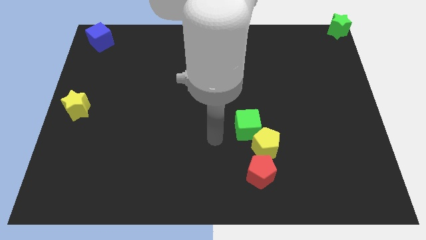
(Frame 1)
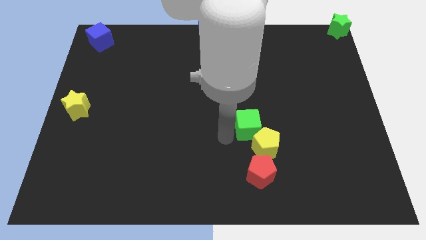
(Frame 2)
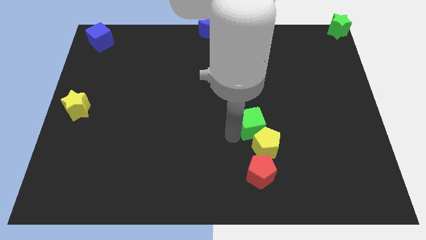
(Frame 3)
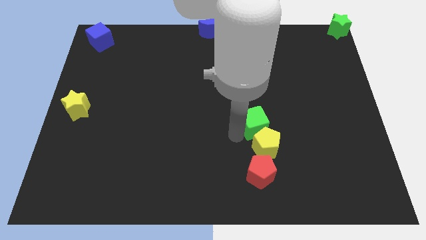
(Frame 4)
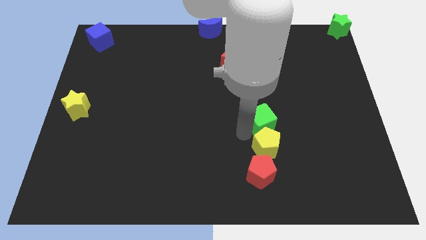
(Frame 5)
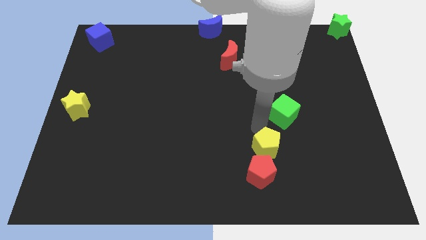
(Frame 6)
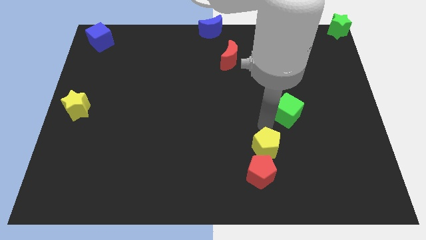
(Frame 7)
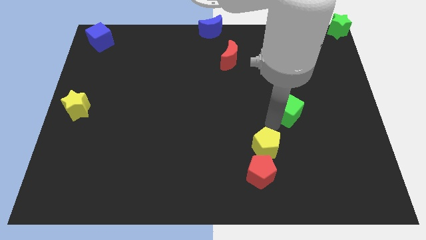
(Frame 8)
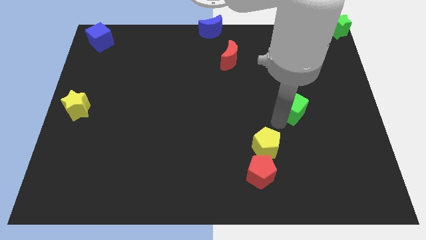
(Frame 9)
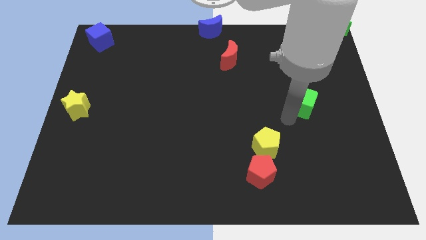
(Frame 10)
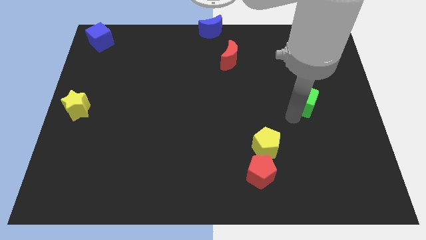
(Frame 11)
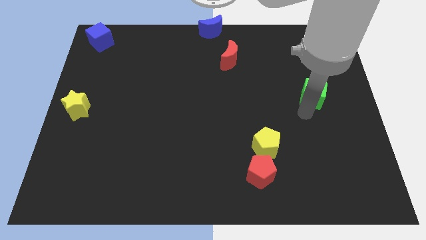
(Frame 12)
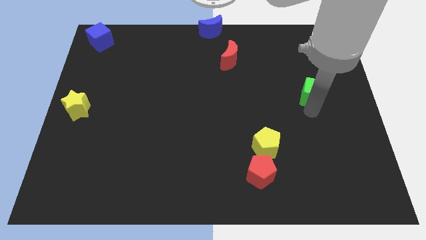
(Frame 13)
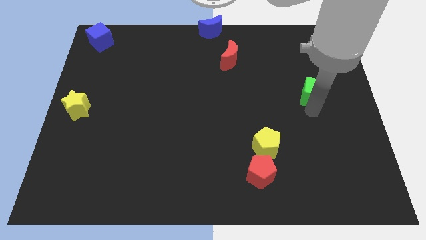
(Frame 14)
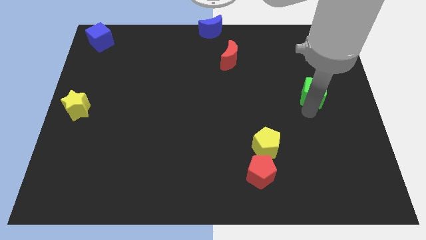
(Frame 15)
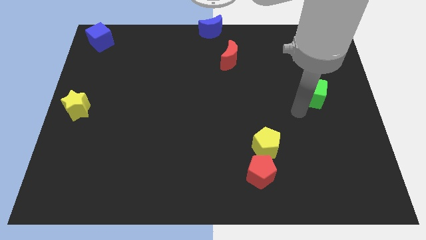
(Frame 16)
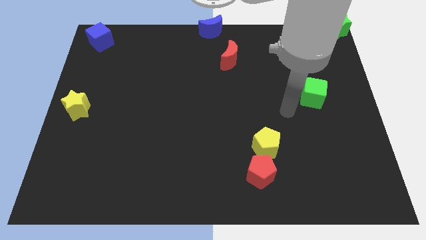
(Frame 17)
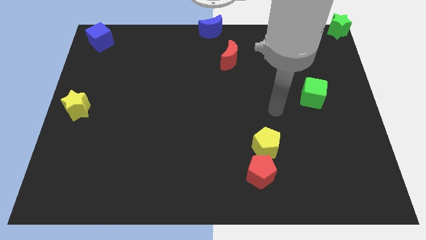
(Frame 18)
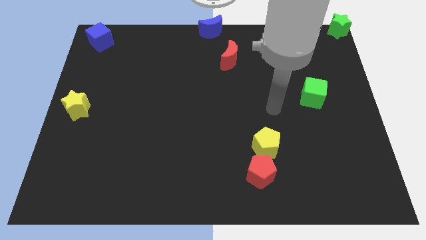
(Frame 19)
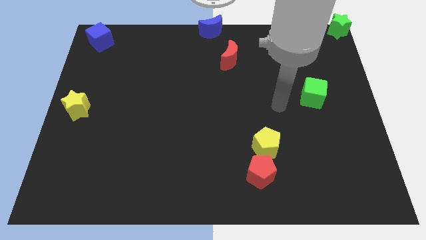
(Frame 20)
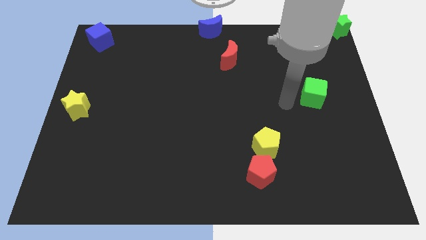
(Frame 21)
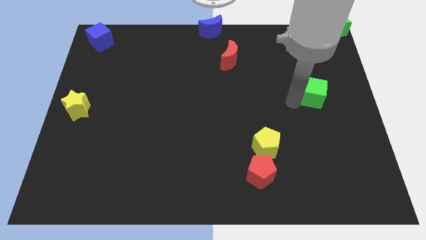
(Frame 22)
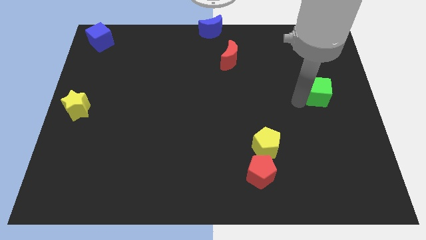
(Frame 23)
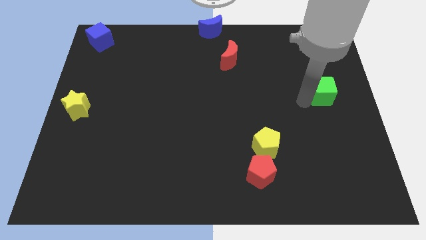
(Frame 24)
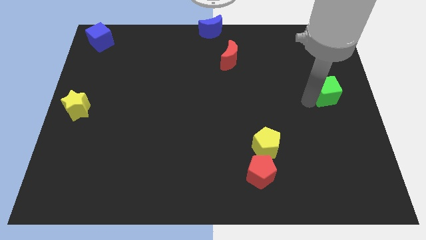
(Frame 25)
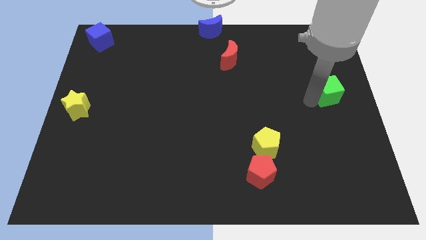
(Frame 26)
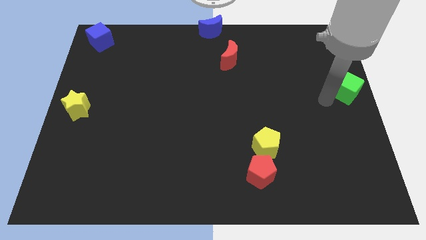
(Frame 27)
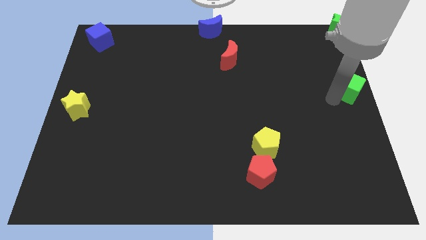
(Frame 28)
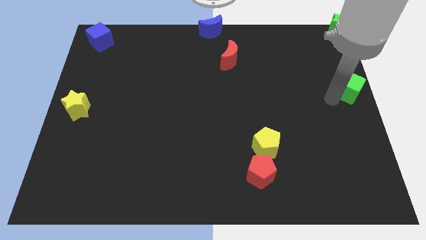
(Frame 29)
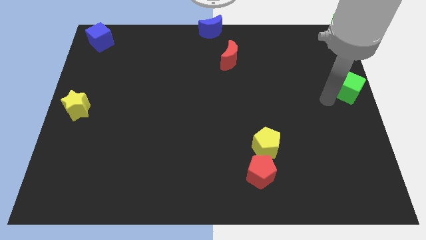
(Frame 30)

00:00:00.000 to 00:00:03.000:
move the green cube to the right center

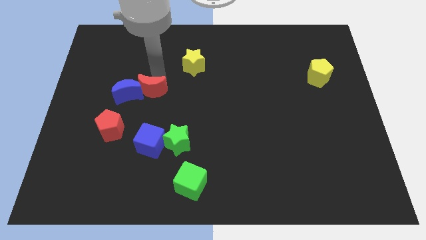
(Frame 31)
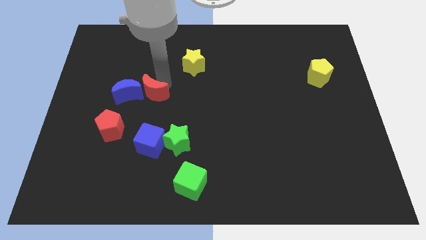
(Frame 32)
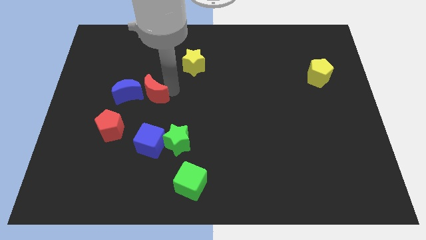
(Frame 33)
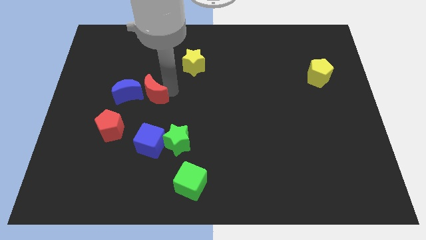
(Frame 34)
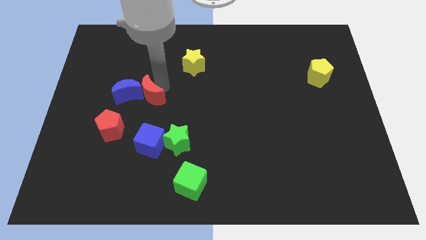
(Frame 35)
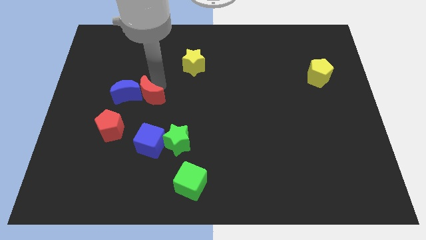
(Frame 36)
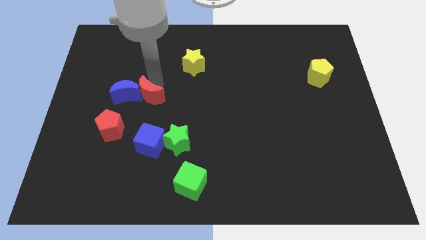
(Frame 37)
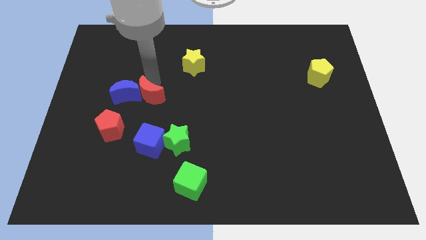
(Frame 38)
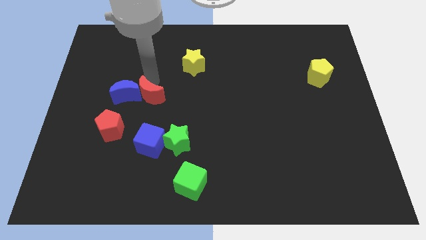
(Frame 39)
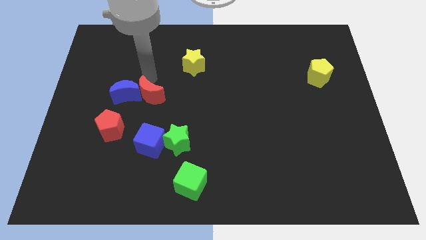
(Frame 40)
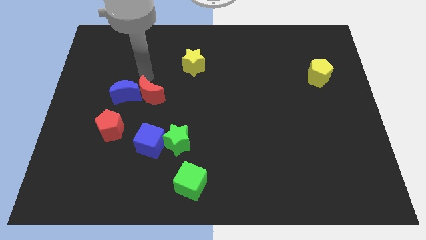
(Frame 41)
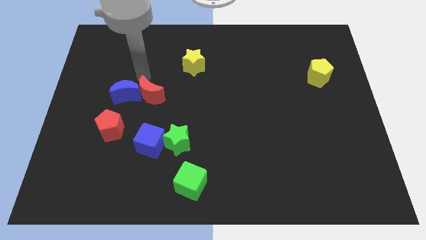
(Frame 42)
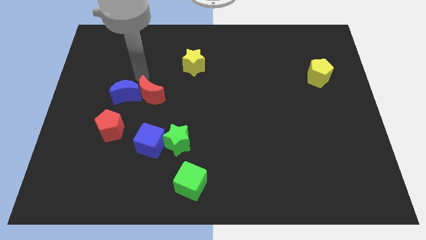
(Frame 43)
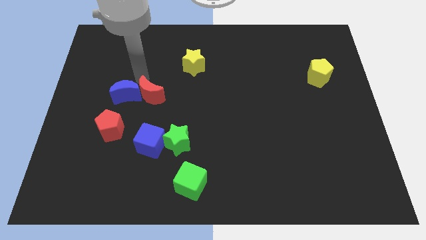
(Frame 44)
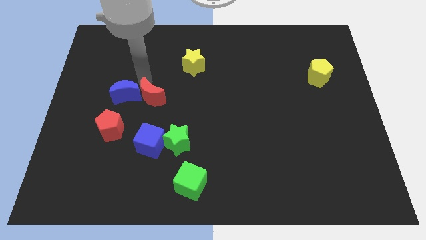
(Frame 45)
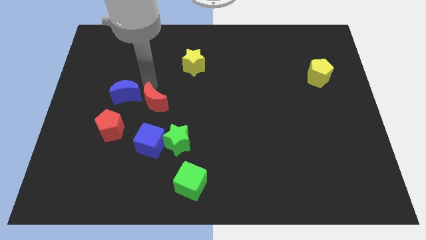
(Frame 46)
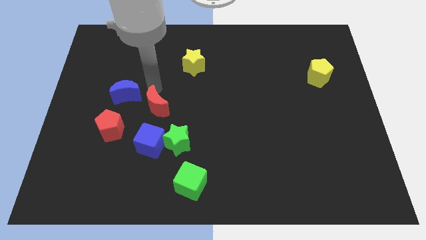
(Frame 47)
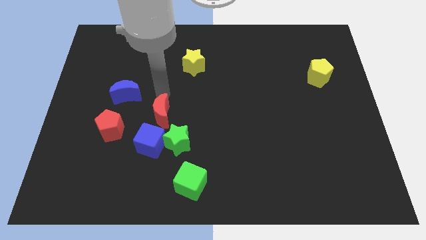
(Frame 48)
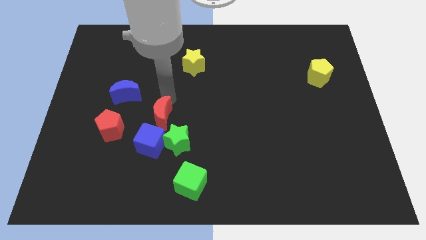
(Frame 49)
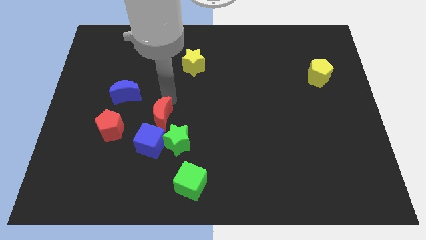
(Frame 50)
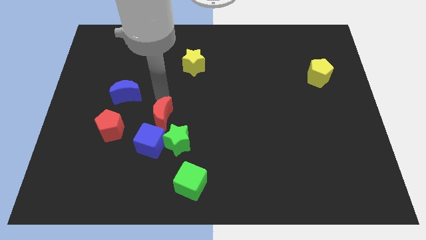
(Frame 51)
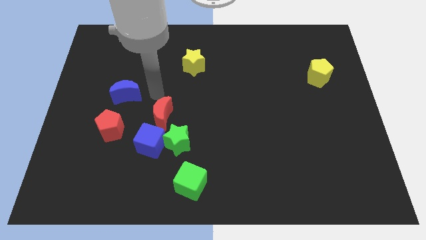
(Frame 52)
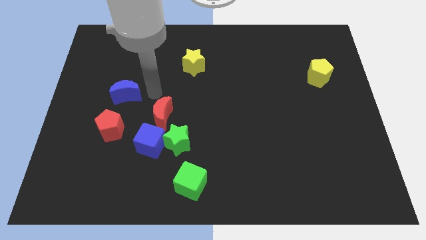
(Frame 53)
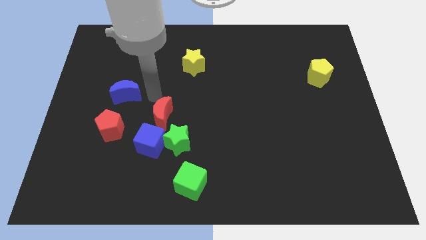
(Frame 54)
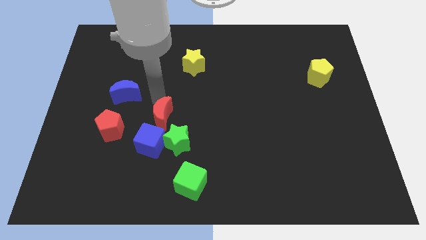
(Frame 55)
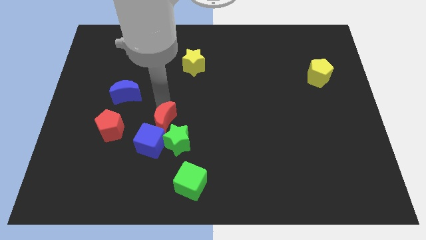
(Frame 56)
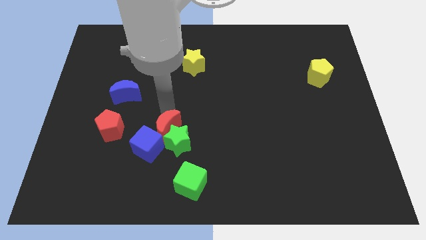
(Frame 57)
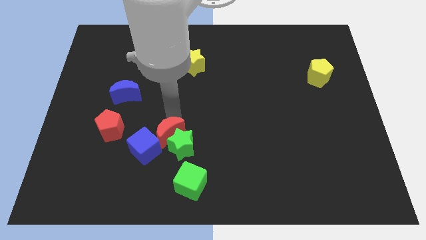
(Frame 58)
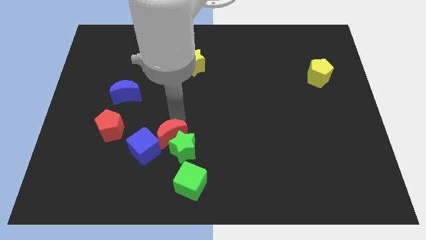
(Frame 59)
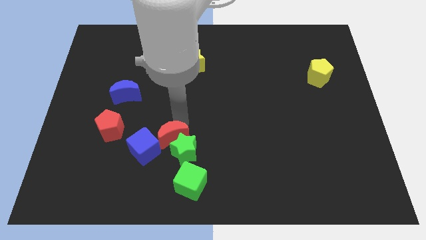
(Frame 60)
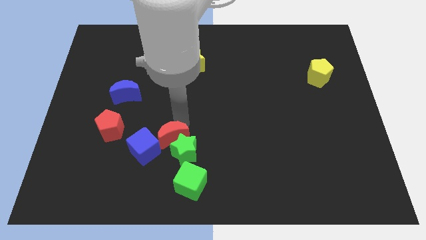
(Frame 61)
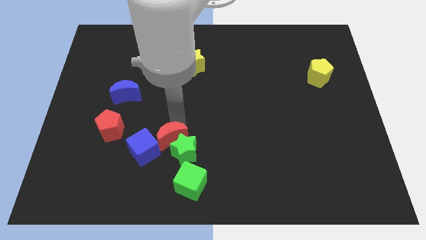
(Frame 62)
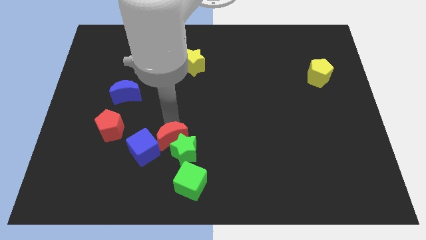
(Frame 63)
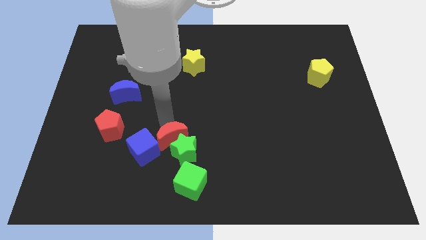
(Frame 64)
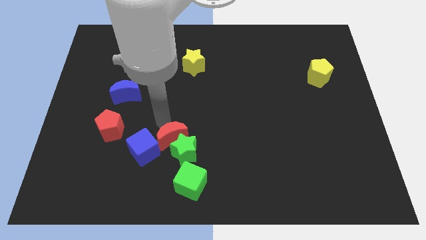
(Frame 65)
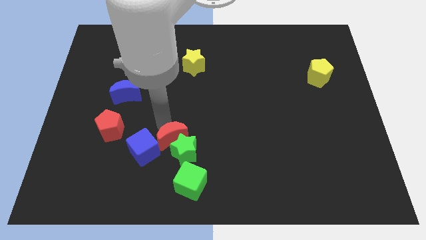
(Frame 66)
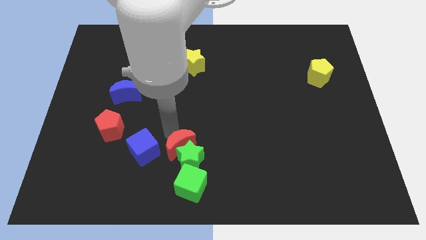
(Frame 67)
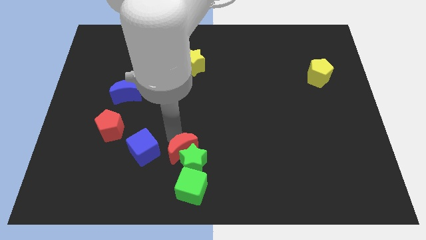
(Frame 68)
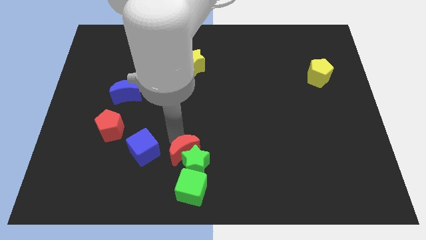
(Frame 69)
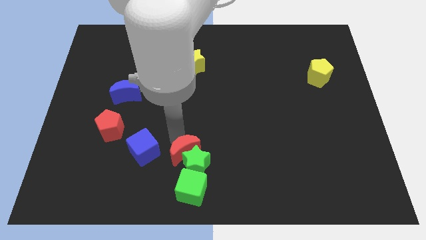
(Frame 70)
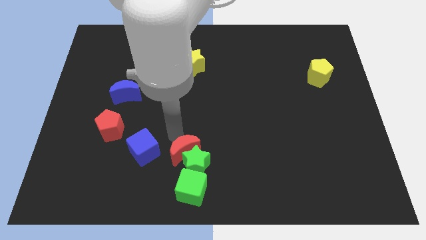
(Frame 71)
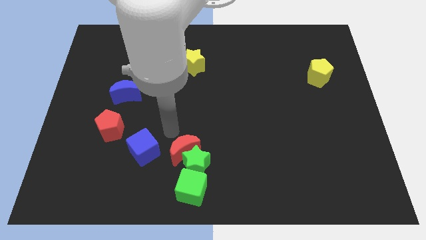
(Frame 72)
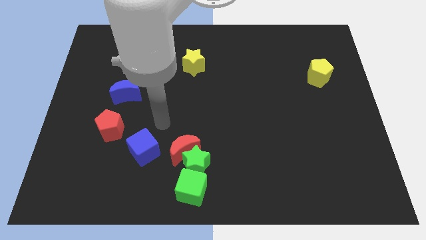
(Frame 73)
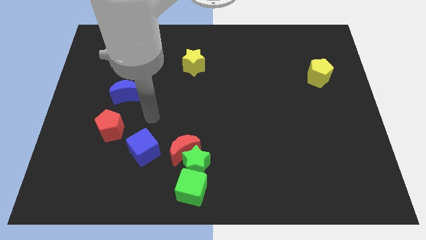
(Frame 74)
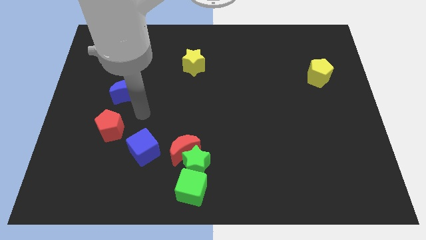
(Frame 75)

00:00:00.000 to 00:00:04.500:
push the red crescent into the blue cube and green star

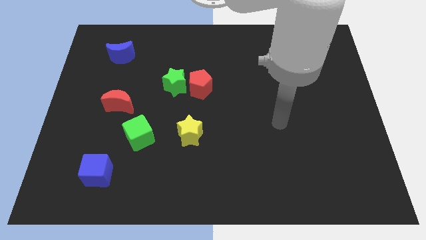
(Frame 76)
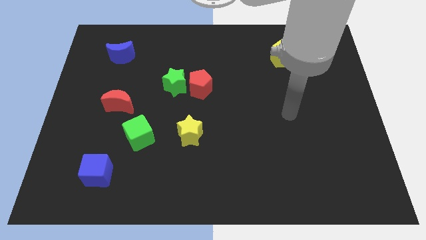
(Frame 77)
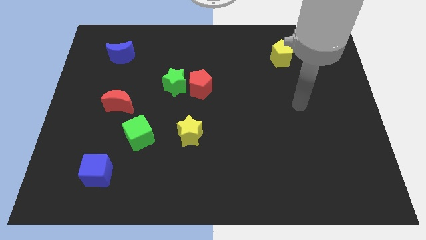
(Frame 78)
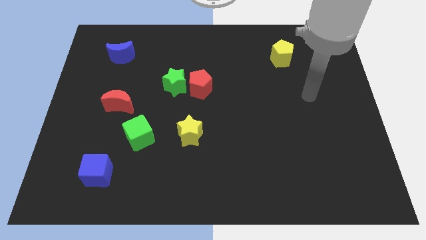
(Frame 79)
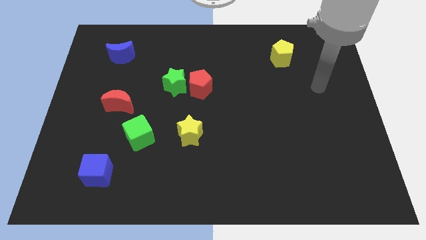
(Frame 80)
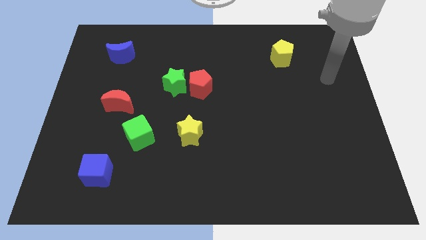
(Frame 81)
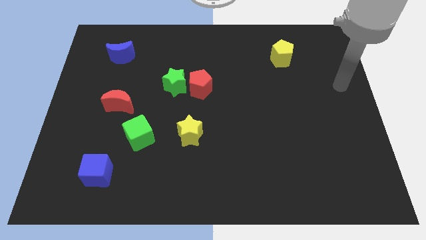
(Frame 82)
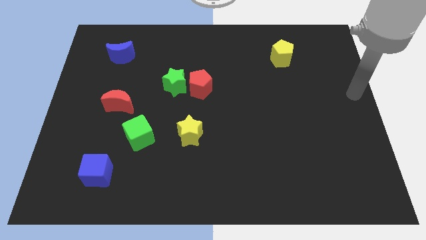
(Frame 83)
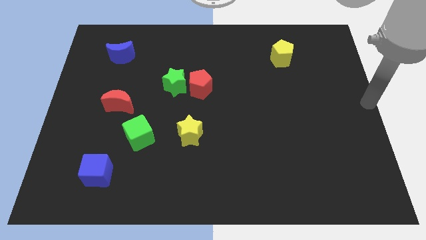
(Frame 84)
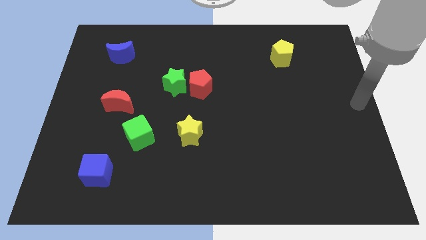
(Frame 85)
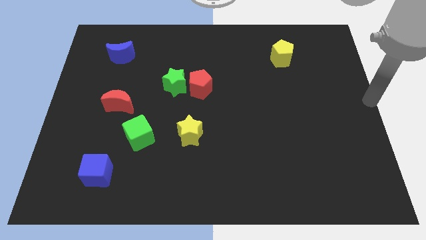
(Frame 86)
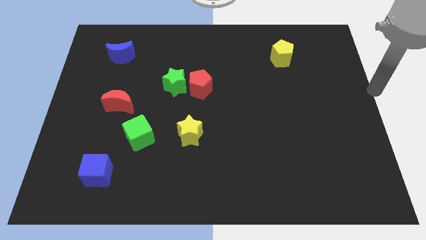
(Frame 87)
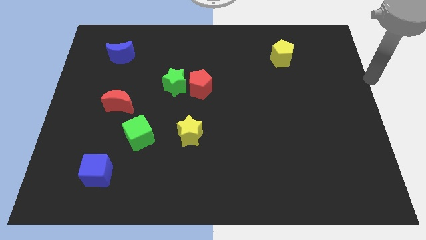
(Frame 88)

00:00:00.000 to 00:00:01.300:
move your arm towards the tight side of the board

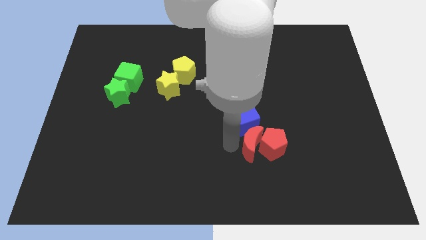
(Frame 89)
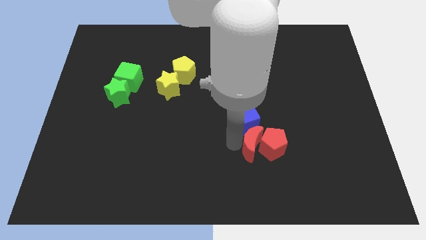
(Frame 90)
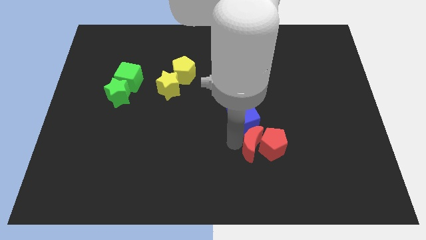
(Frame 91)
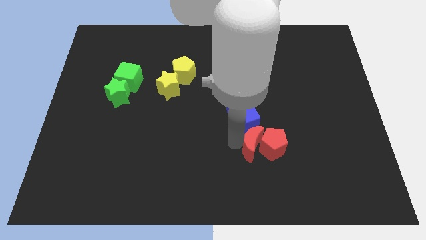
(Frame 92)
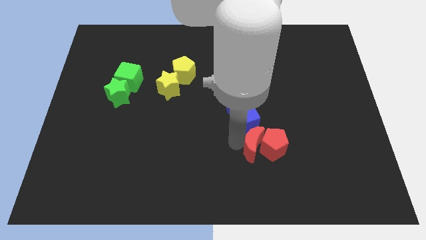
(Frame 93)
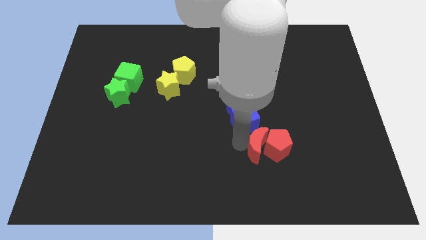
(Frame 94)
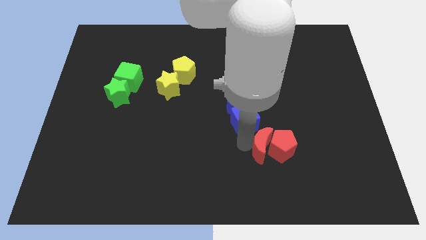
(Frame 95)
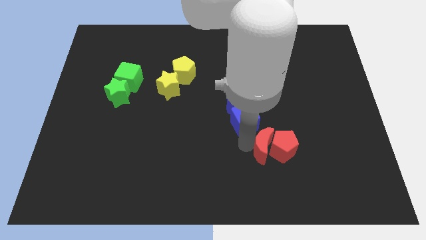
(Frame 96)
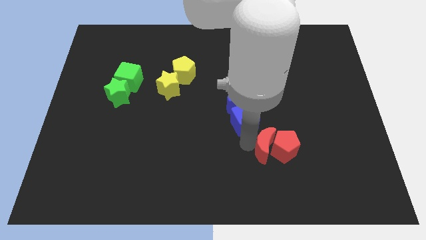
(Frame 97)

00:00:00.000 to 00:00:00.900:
push slightly red moon into the red pentagon to the right
